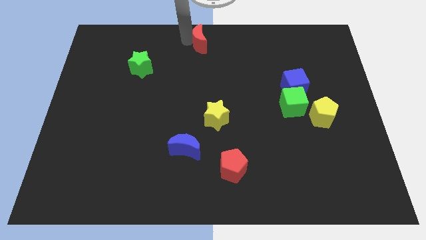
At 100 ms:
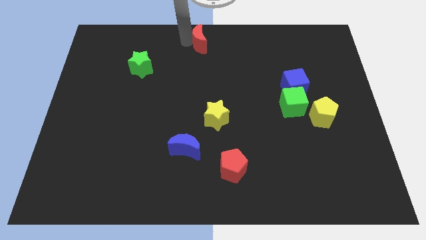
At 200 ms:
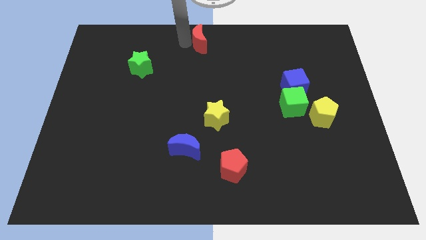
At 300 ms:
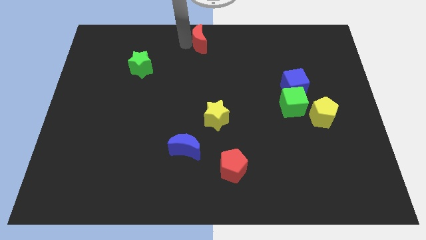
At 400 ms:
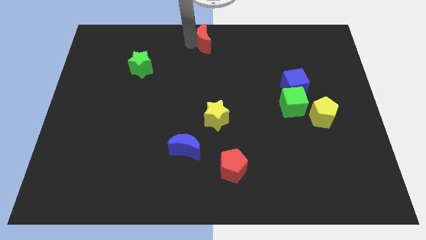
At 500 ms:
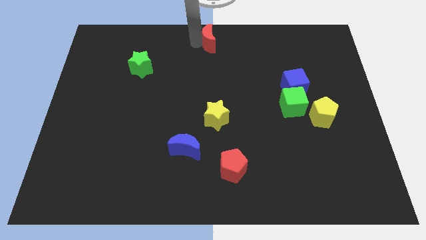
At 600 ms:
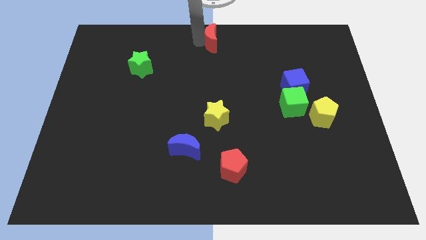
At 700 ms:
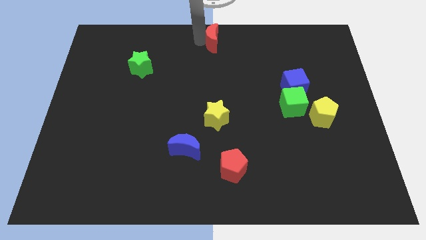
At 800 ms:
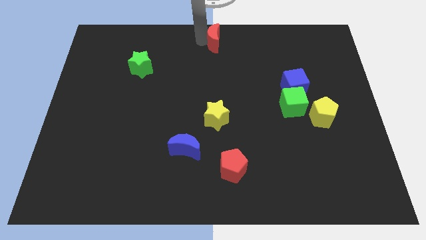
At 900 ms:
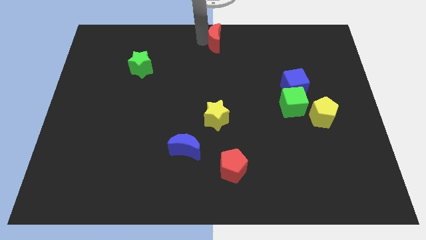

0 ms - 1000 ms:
move red crescent vertically above yellow star

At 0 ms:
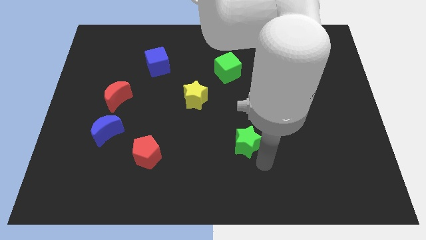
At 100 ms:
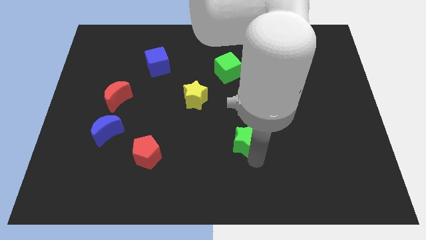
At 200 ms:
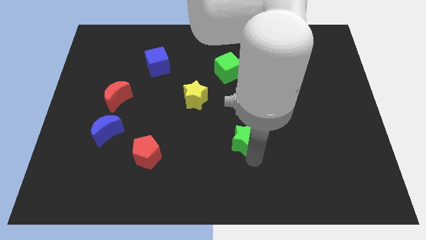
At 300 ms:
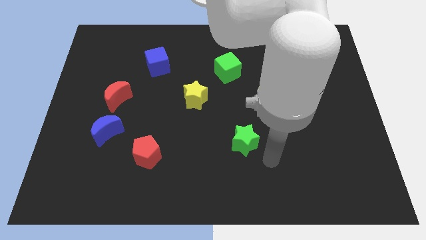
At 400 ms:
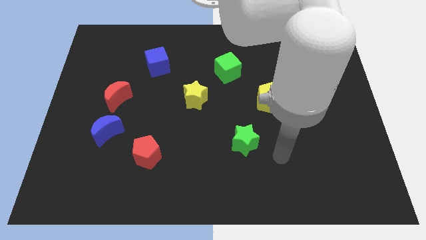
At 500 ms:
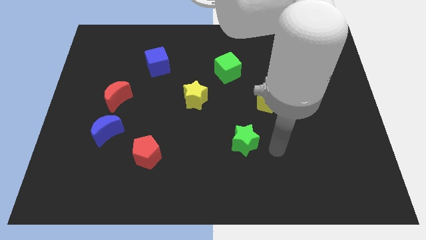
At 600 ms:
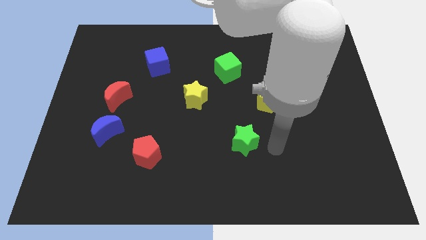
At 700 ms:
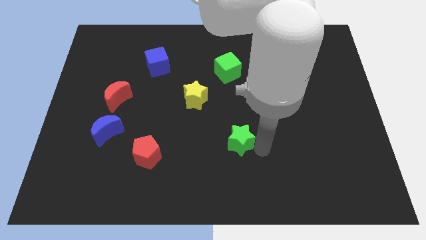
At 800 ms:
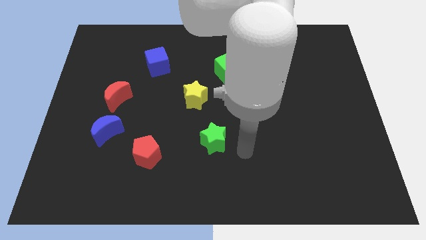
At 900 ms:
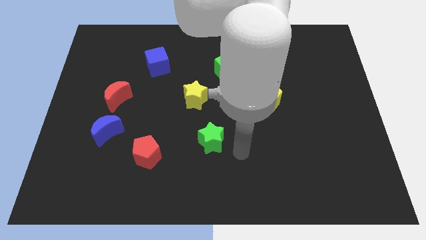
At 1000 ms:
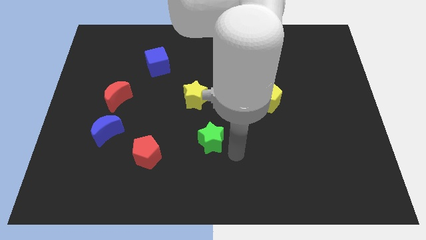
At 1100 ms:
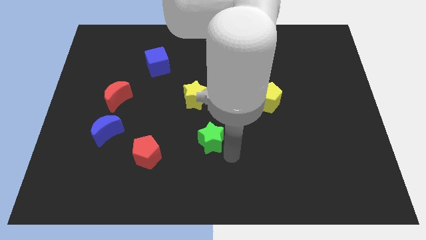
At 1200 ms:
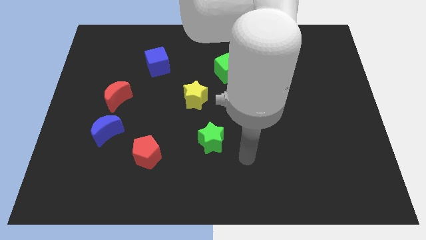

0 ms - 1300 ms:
move the green star to the right of the red pentagon

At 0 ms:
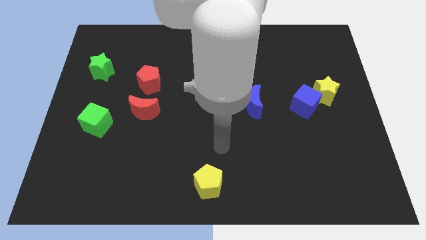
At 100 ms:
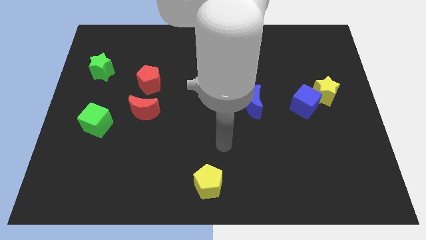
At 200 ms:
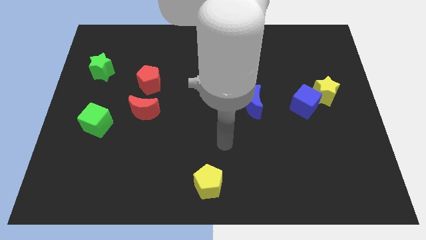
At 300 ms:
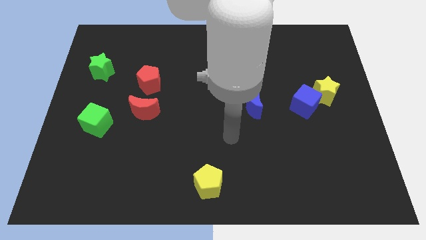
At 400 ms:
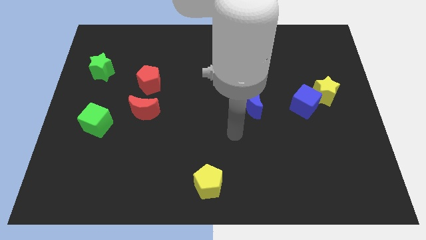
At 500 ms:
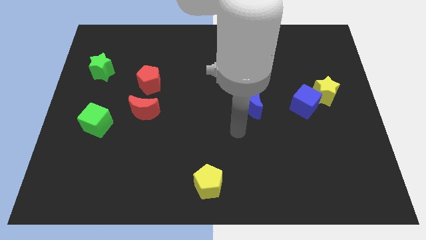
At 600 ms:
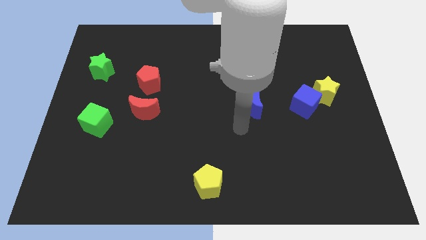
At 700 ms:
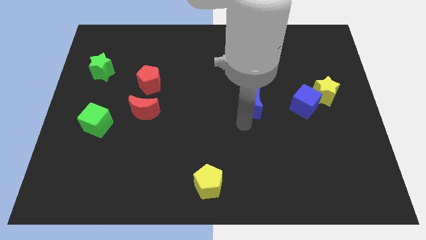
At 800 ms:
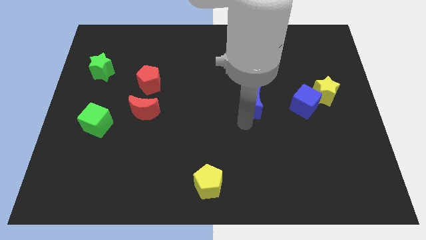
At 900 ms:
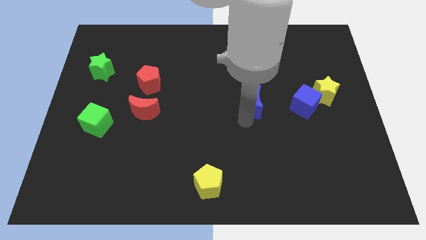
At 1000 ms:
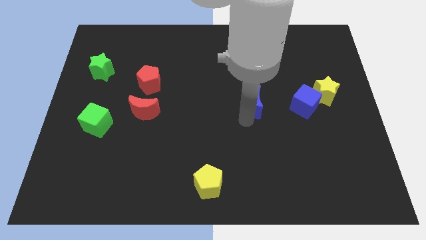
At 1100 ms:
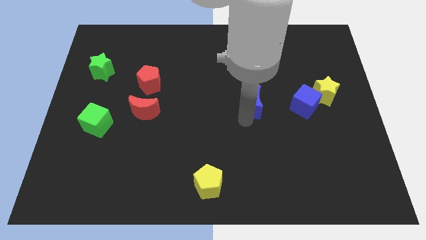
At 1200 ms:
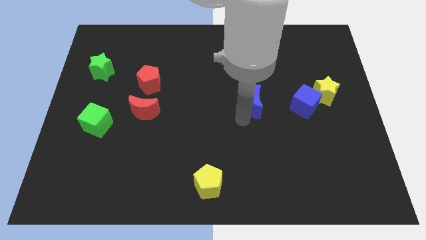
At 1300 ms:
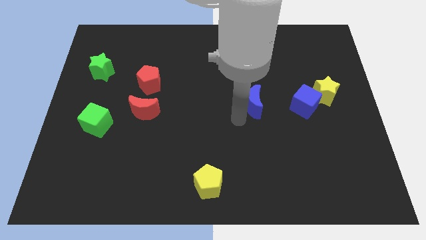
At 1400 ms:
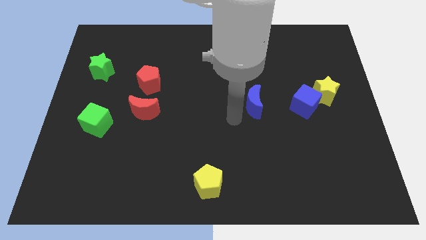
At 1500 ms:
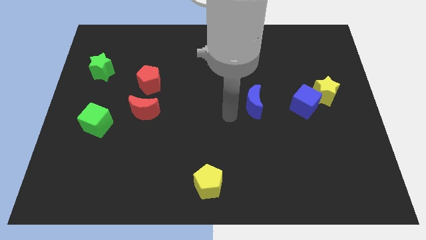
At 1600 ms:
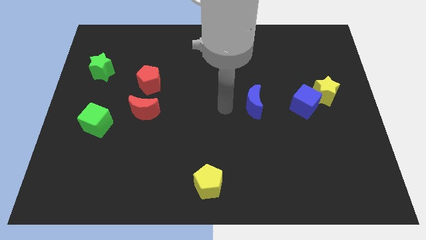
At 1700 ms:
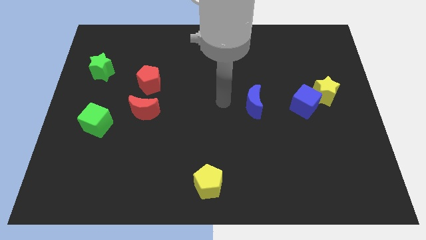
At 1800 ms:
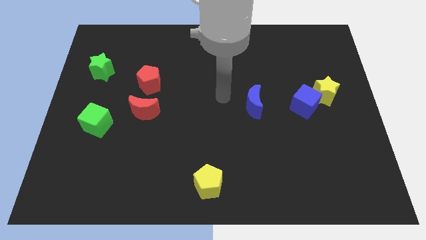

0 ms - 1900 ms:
move your arm to the left of the blue moon

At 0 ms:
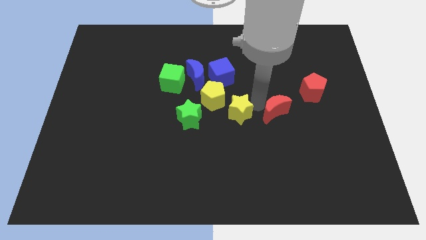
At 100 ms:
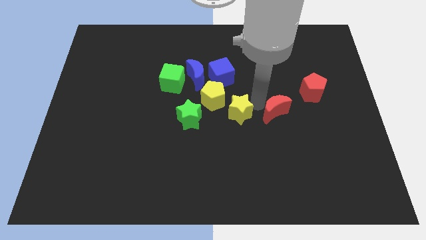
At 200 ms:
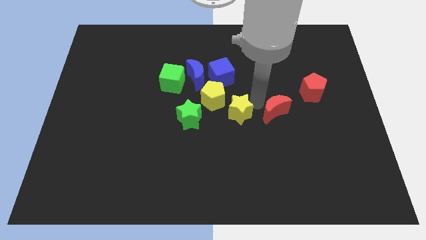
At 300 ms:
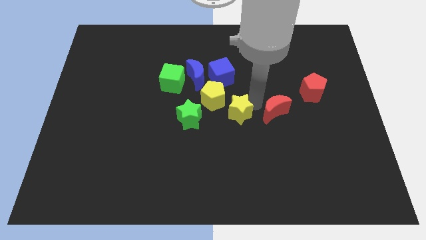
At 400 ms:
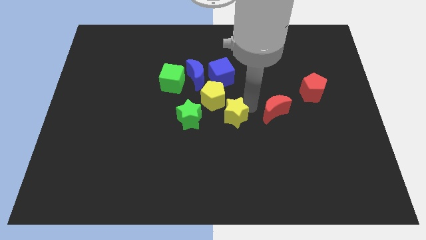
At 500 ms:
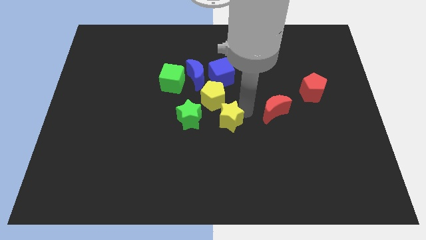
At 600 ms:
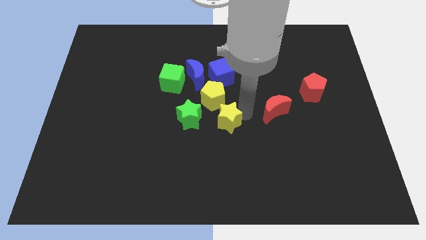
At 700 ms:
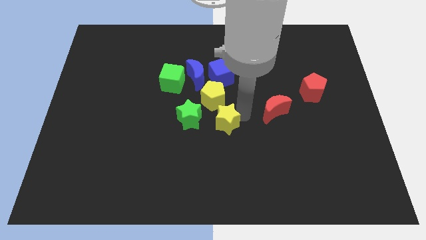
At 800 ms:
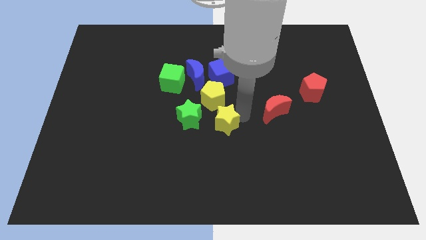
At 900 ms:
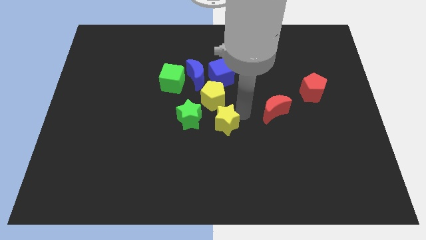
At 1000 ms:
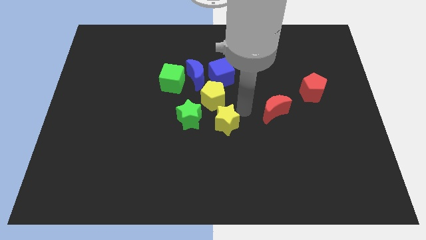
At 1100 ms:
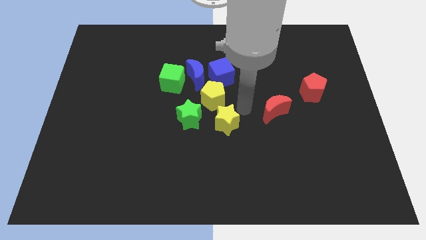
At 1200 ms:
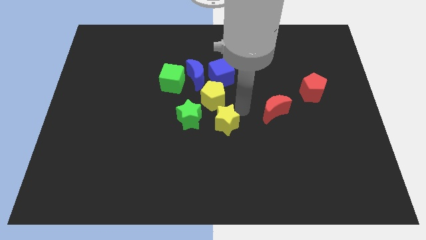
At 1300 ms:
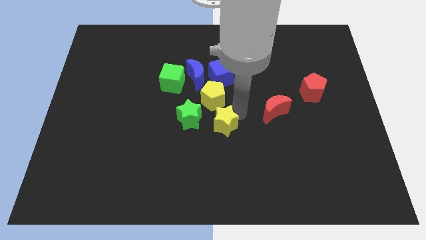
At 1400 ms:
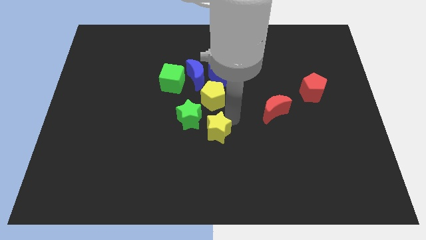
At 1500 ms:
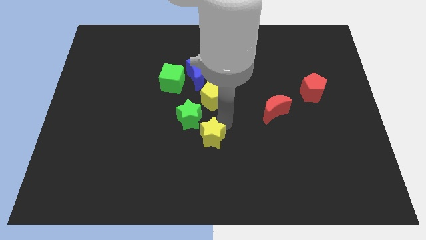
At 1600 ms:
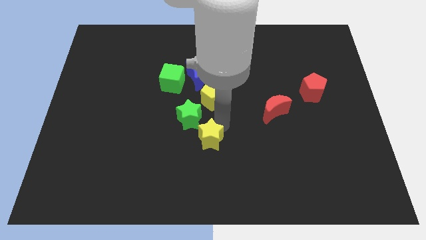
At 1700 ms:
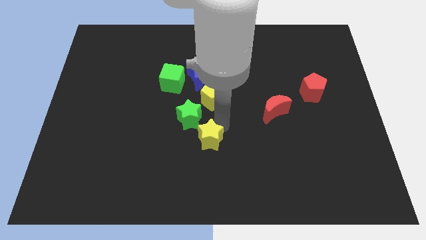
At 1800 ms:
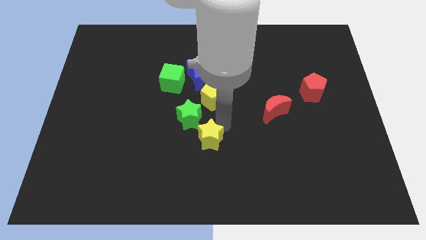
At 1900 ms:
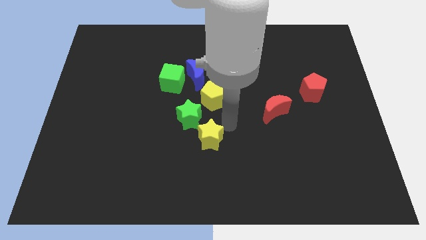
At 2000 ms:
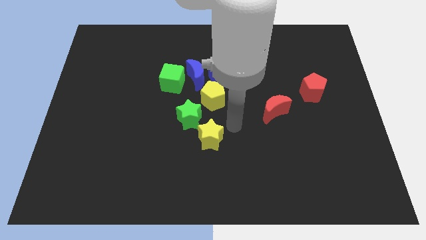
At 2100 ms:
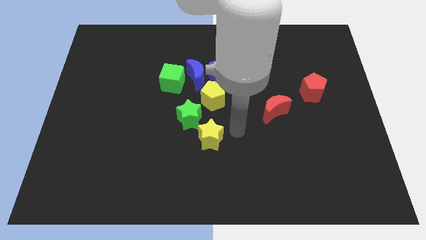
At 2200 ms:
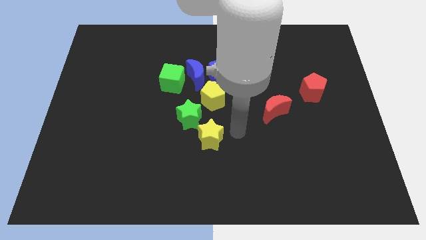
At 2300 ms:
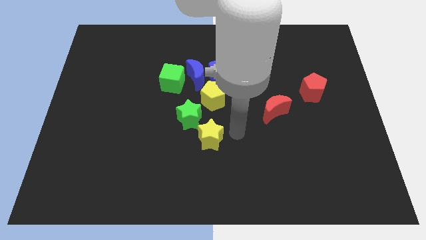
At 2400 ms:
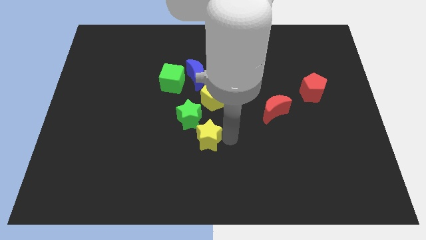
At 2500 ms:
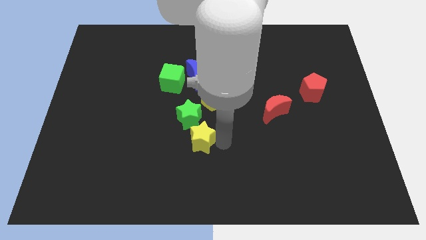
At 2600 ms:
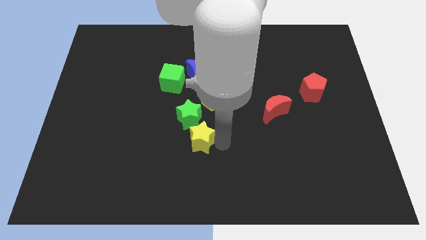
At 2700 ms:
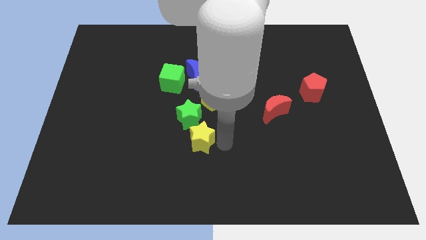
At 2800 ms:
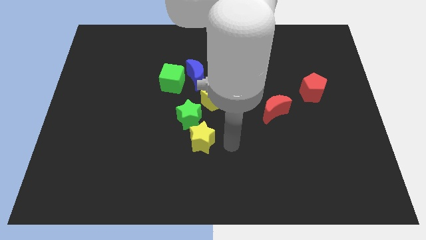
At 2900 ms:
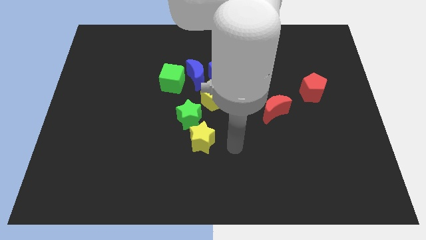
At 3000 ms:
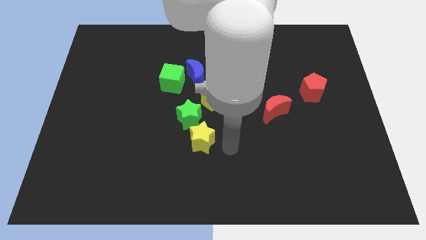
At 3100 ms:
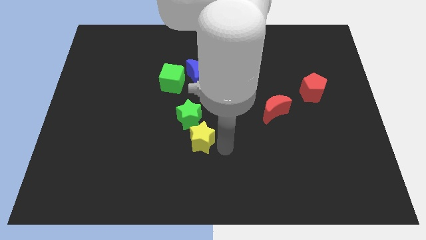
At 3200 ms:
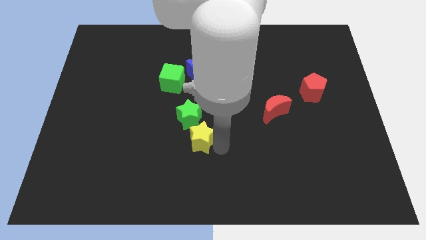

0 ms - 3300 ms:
move the yellow star towards the bottom side of the green star

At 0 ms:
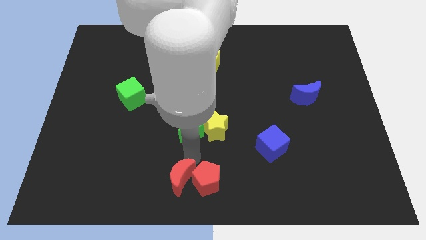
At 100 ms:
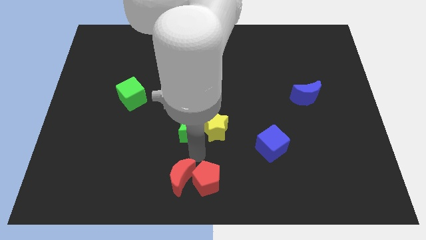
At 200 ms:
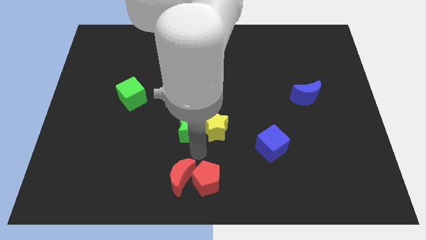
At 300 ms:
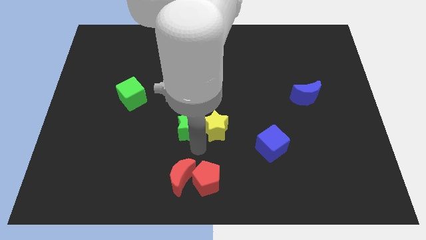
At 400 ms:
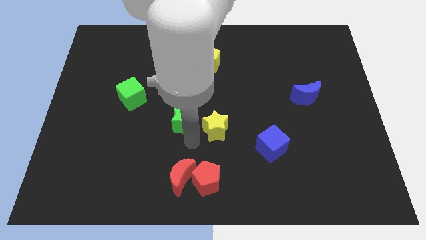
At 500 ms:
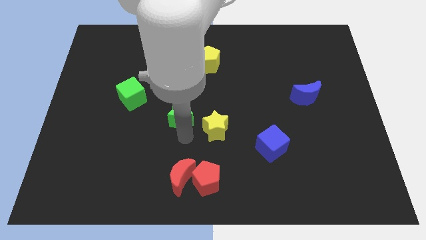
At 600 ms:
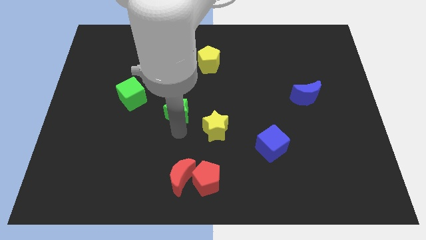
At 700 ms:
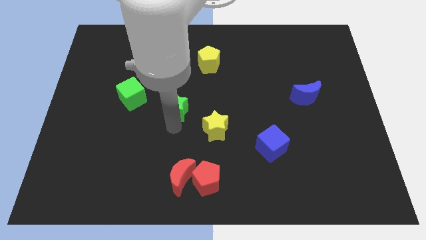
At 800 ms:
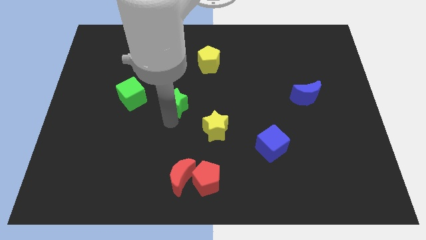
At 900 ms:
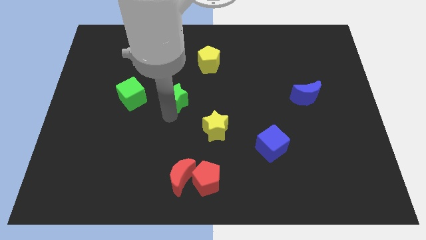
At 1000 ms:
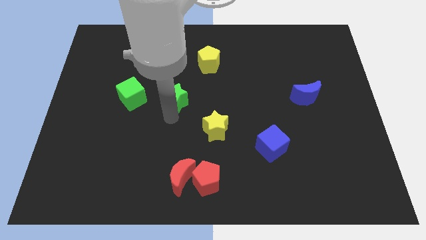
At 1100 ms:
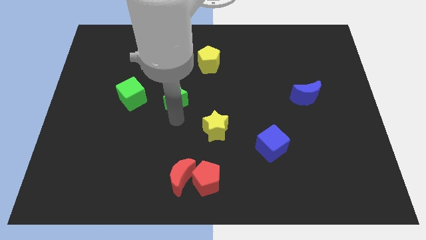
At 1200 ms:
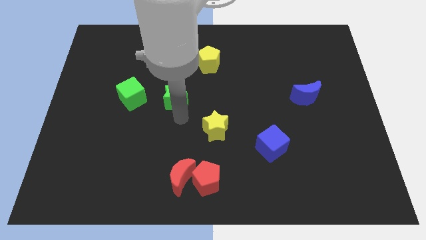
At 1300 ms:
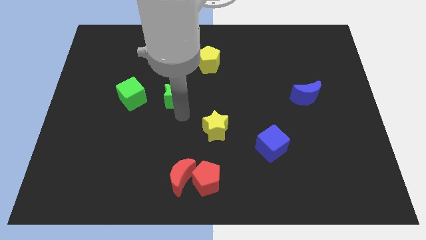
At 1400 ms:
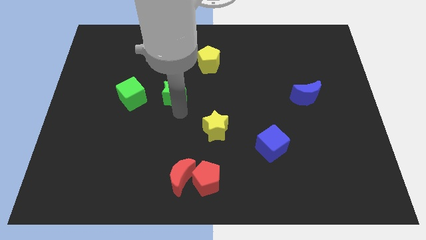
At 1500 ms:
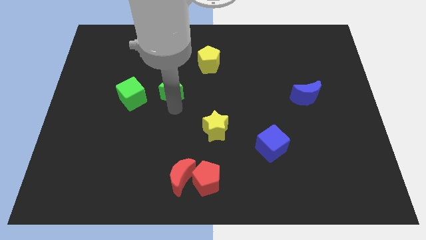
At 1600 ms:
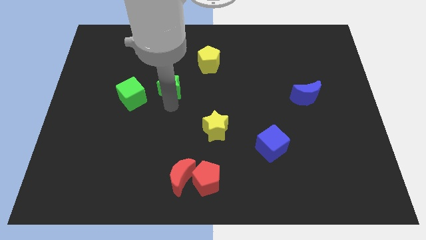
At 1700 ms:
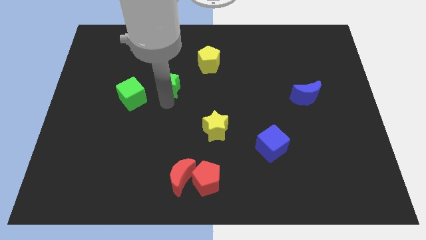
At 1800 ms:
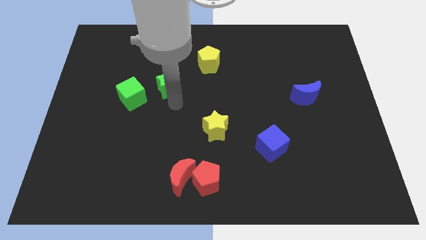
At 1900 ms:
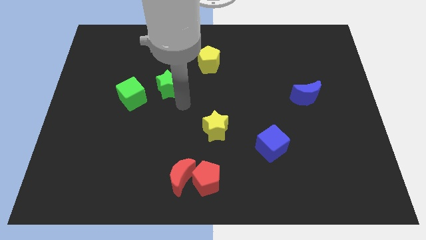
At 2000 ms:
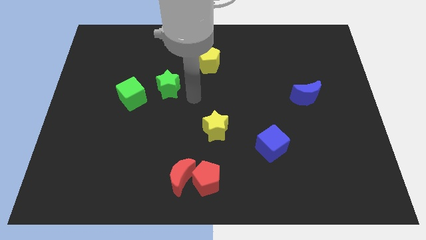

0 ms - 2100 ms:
push the green star to the right side of the green cube
